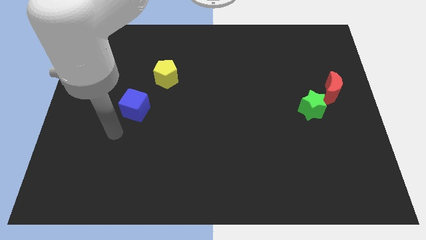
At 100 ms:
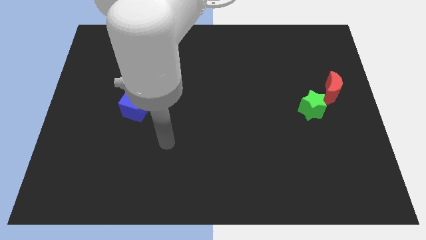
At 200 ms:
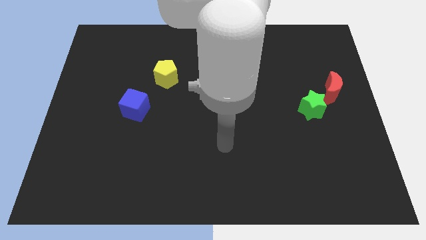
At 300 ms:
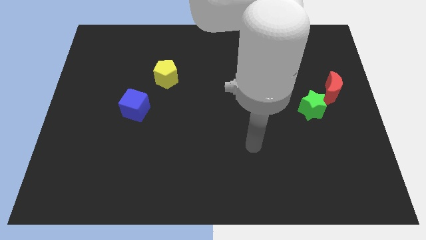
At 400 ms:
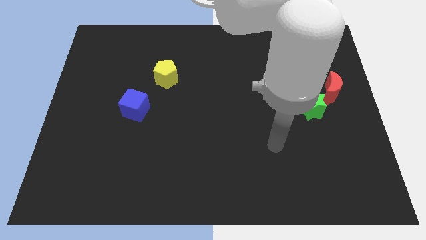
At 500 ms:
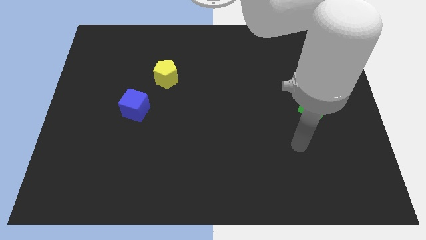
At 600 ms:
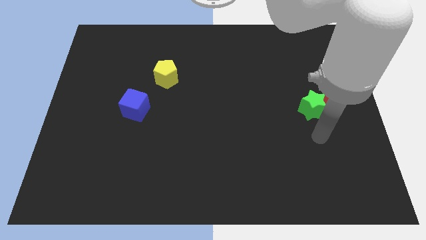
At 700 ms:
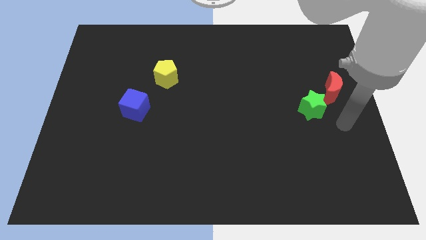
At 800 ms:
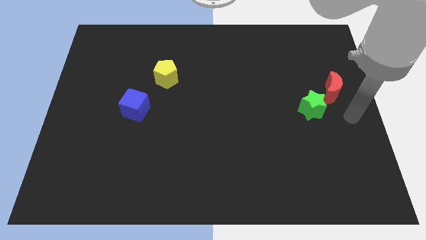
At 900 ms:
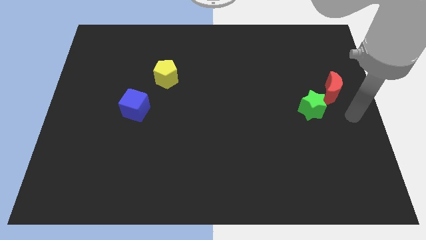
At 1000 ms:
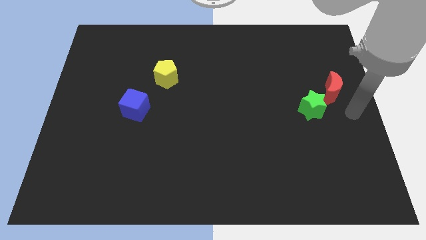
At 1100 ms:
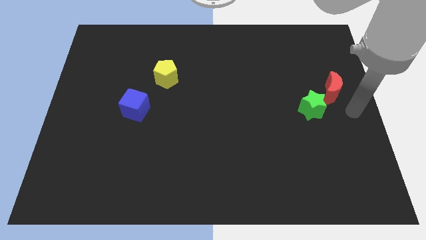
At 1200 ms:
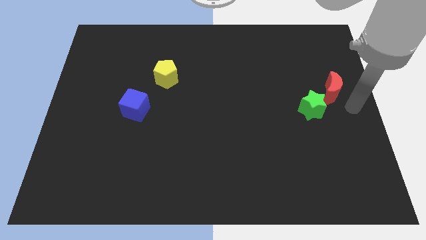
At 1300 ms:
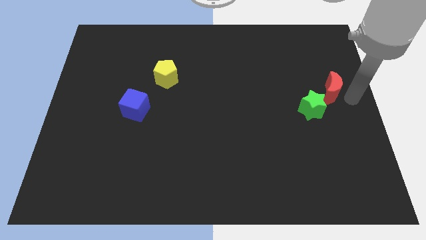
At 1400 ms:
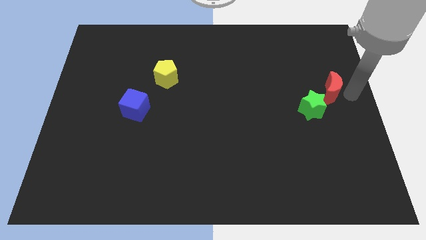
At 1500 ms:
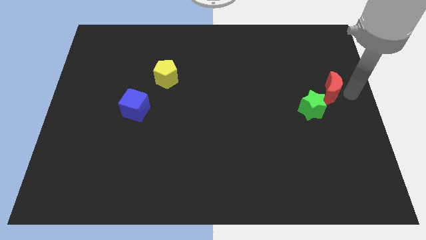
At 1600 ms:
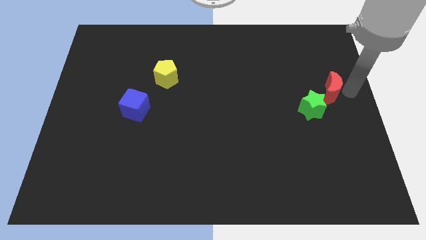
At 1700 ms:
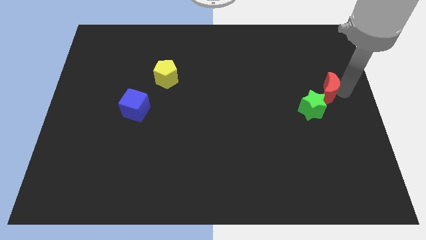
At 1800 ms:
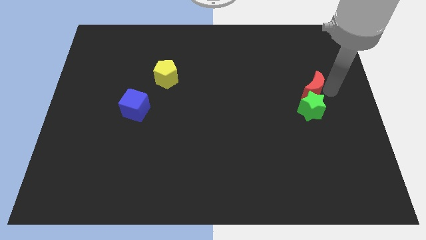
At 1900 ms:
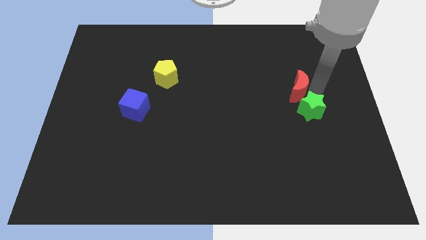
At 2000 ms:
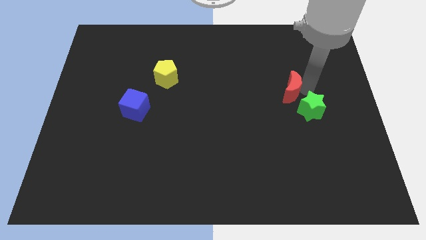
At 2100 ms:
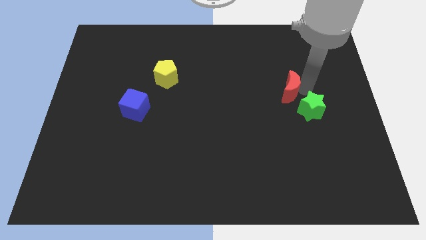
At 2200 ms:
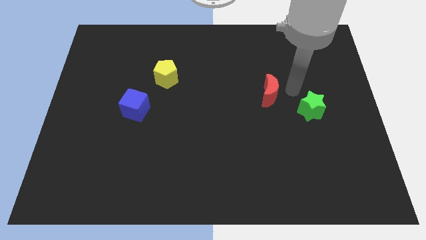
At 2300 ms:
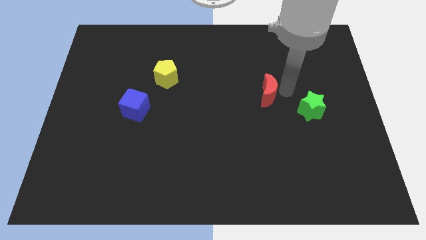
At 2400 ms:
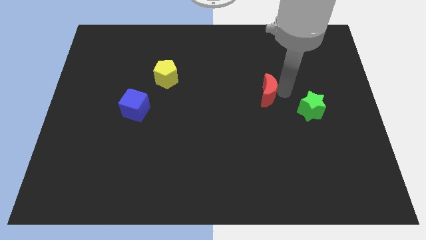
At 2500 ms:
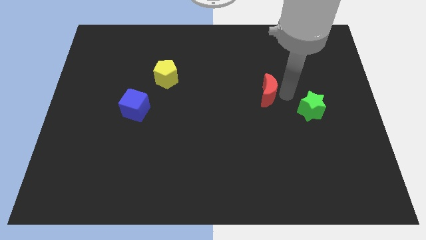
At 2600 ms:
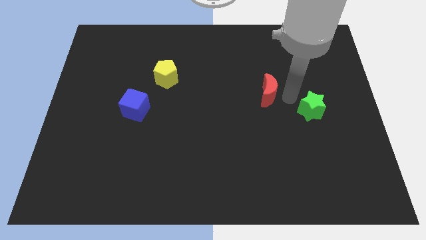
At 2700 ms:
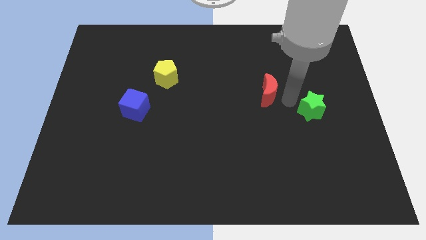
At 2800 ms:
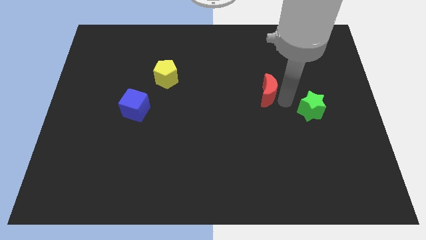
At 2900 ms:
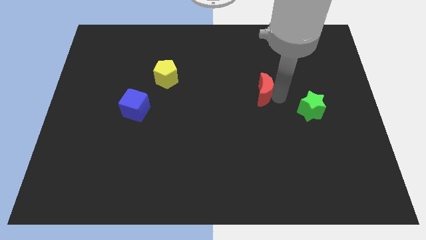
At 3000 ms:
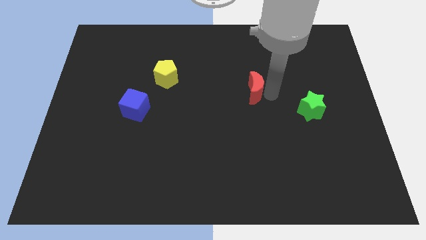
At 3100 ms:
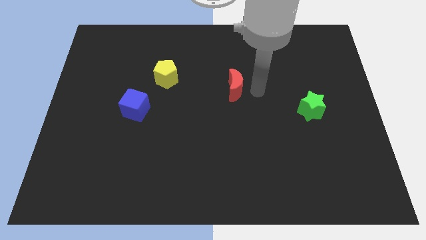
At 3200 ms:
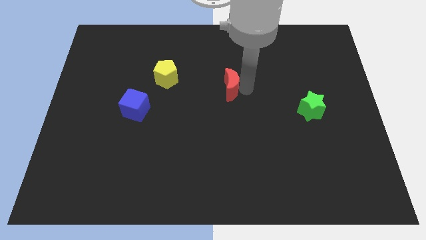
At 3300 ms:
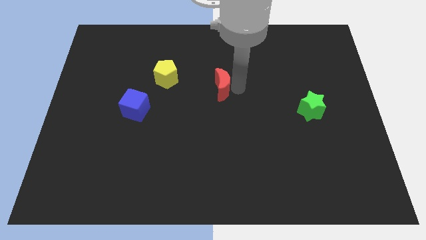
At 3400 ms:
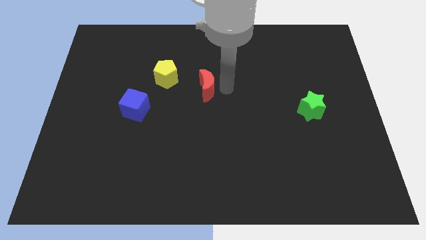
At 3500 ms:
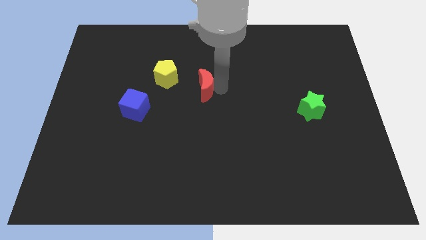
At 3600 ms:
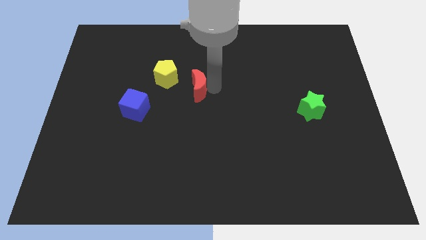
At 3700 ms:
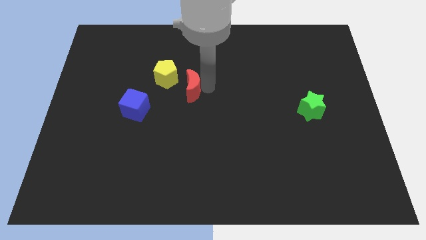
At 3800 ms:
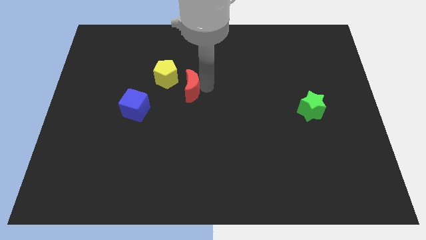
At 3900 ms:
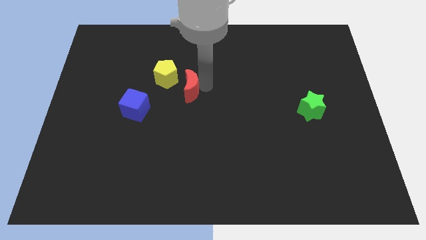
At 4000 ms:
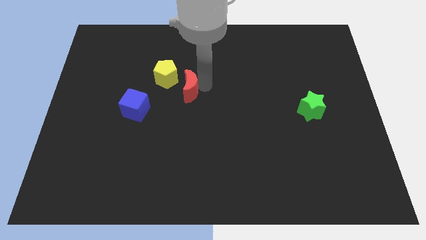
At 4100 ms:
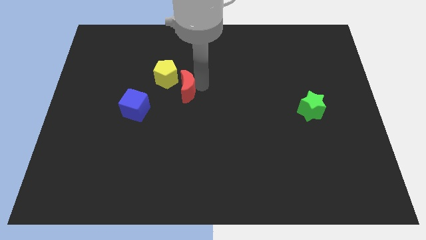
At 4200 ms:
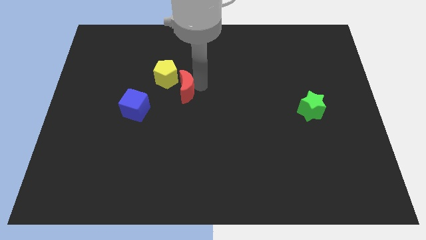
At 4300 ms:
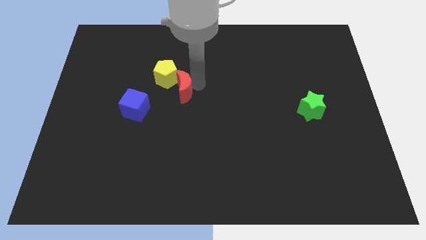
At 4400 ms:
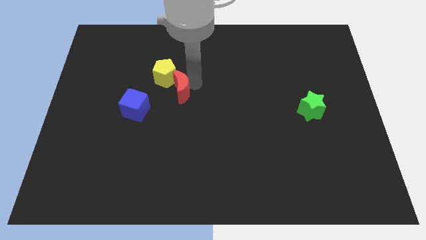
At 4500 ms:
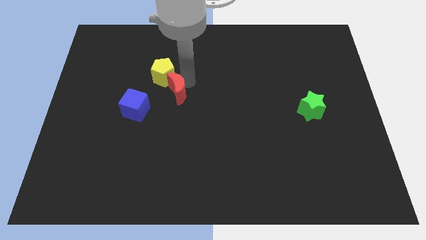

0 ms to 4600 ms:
put the red moon towards the yellow block

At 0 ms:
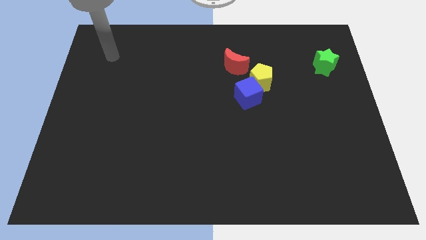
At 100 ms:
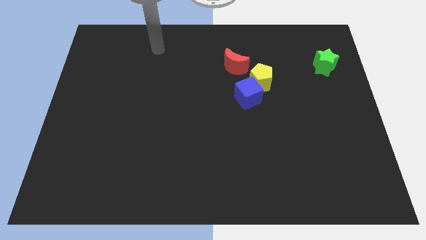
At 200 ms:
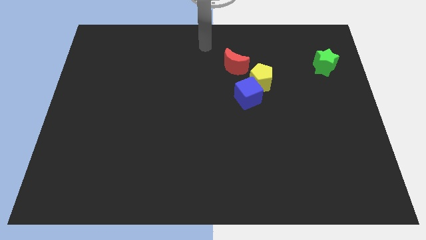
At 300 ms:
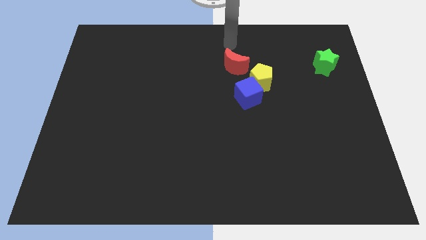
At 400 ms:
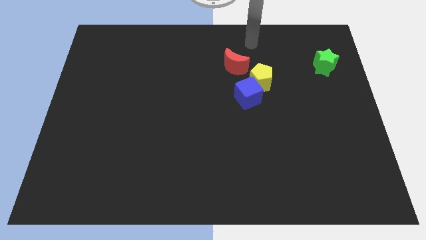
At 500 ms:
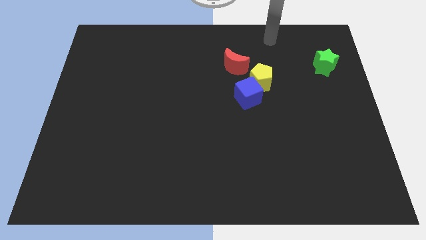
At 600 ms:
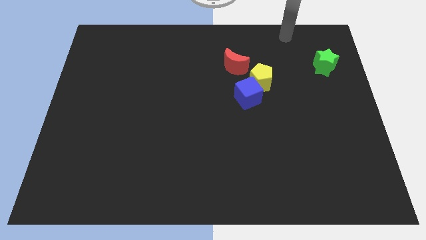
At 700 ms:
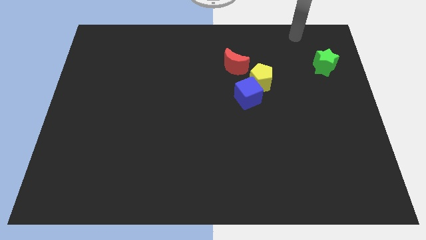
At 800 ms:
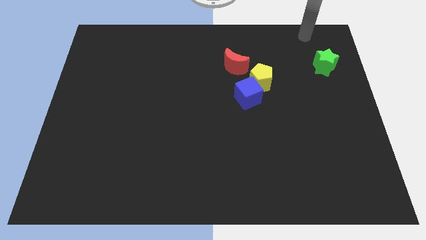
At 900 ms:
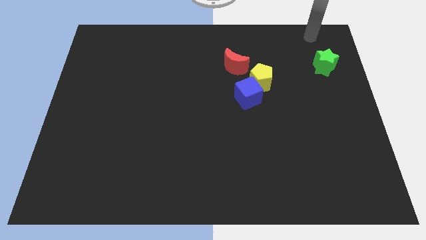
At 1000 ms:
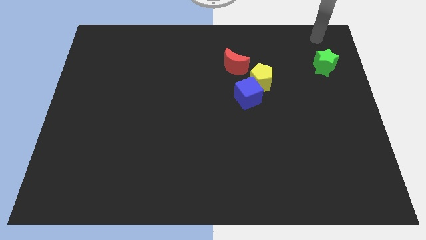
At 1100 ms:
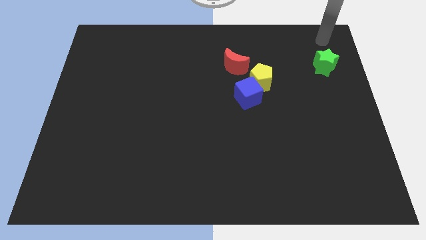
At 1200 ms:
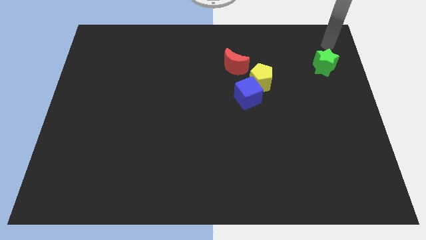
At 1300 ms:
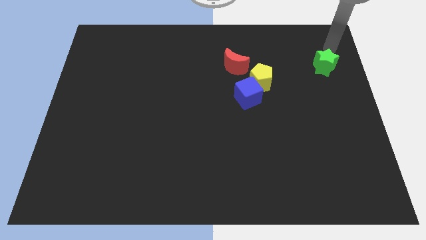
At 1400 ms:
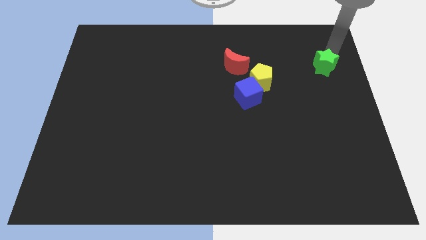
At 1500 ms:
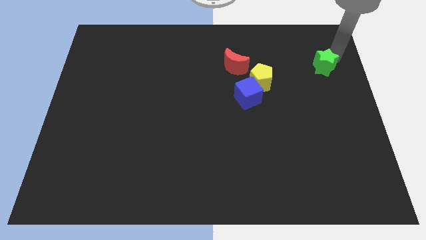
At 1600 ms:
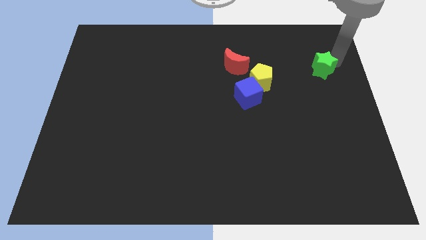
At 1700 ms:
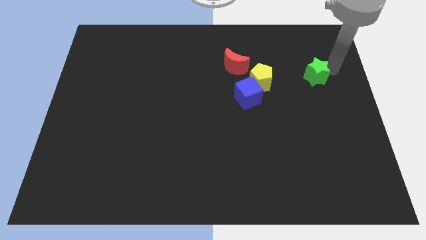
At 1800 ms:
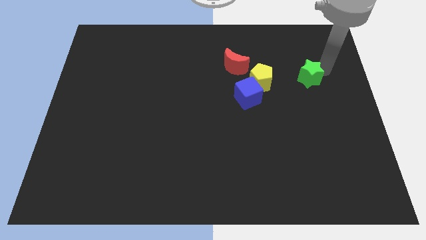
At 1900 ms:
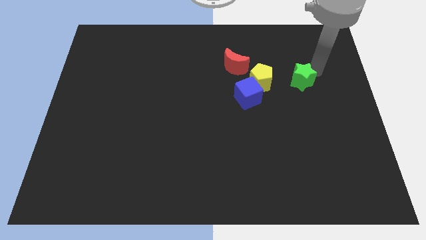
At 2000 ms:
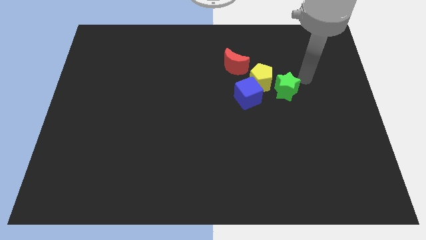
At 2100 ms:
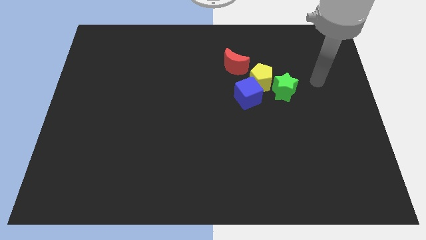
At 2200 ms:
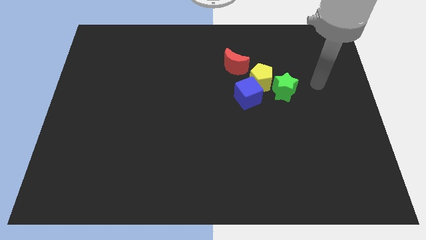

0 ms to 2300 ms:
put the green star to the yellow block

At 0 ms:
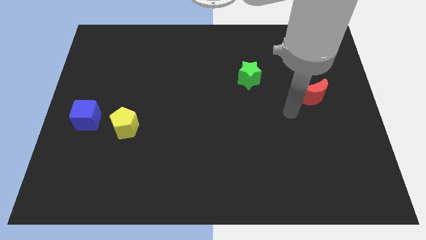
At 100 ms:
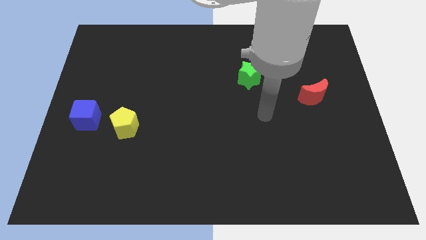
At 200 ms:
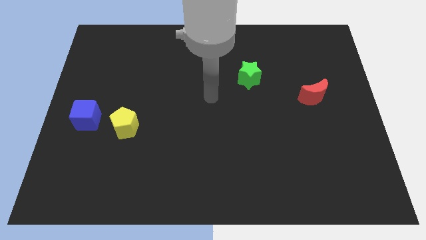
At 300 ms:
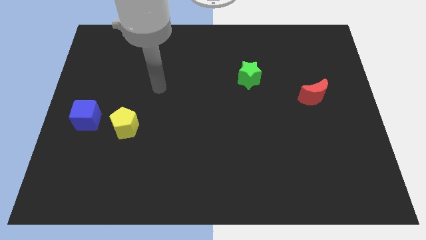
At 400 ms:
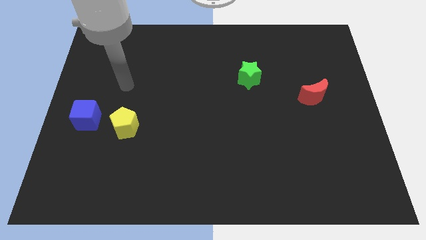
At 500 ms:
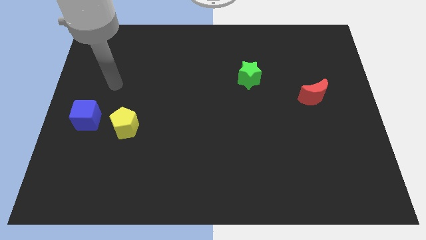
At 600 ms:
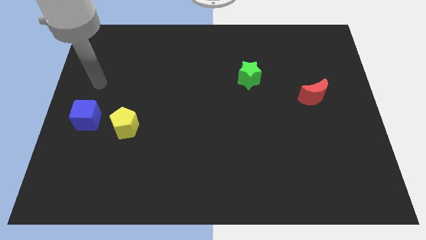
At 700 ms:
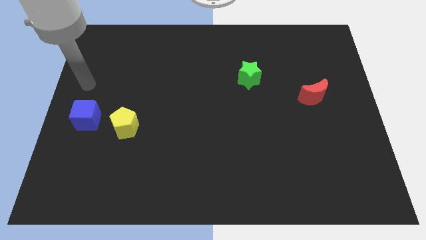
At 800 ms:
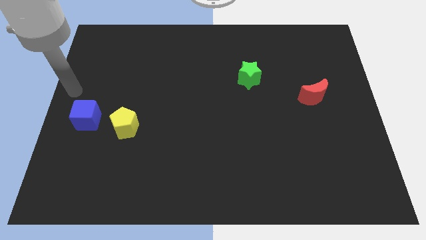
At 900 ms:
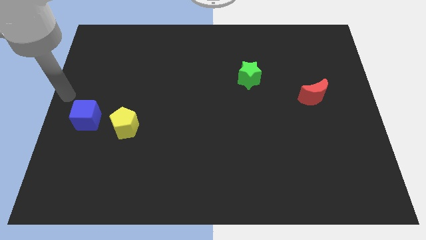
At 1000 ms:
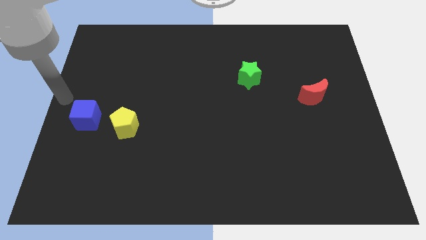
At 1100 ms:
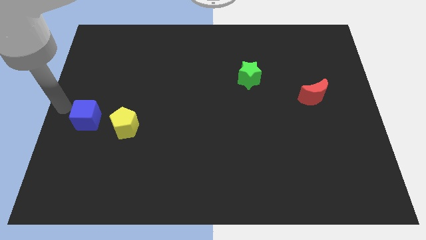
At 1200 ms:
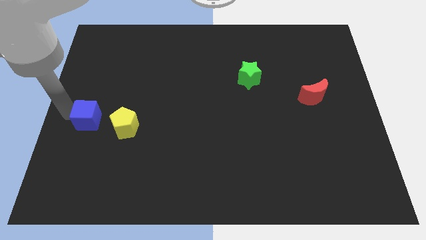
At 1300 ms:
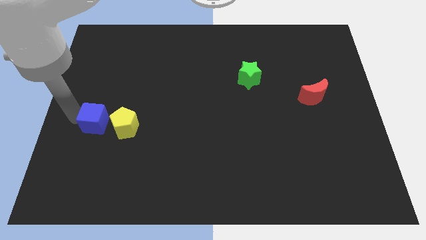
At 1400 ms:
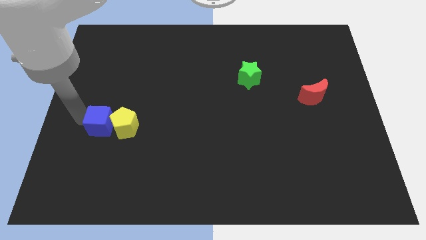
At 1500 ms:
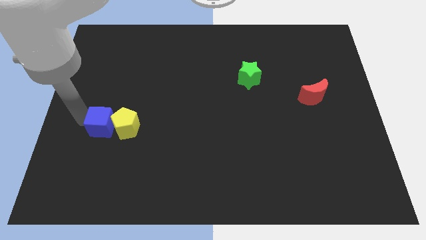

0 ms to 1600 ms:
push the blue cube towards the yellow pentagon

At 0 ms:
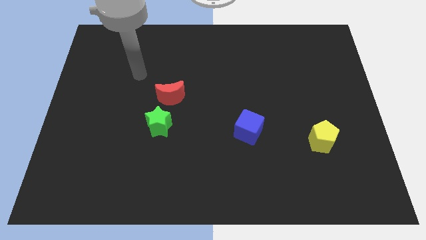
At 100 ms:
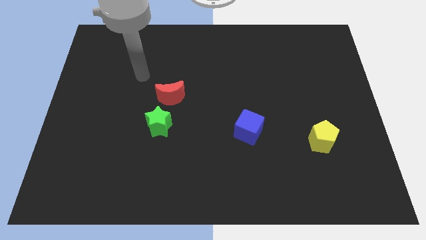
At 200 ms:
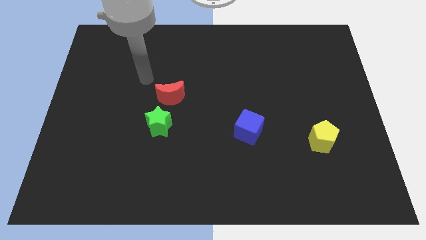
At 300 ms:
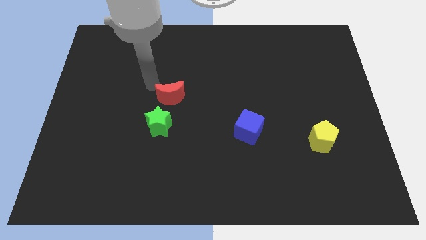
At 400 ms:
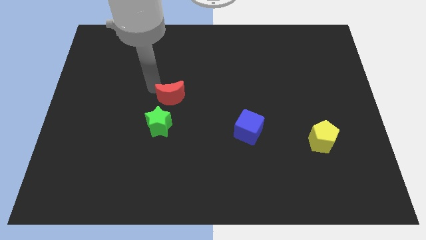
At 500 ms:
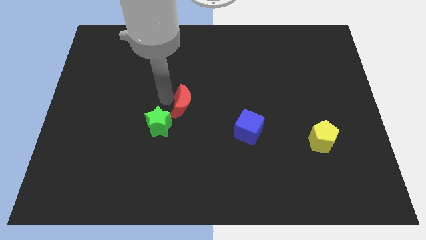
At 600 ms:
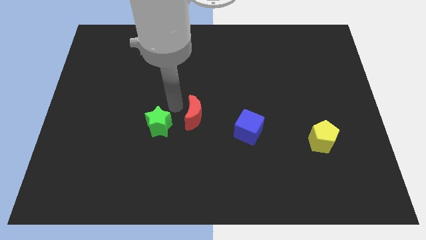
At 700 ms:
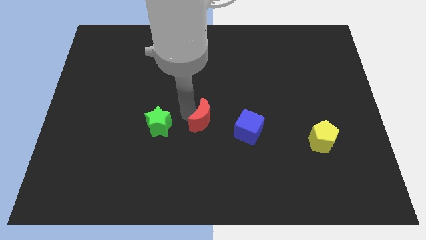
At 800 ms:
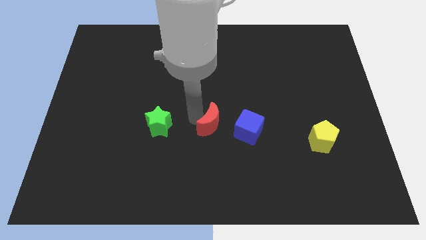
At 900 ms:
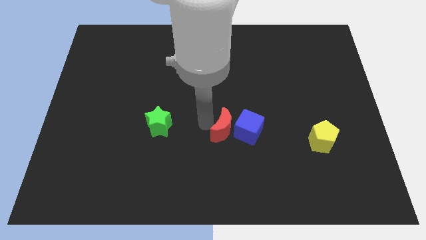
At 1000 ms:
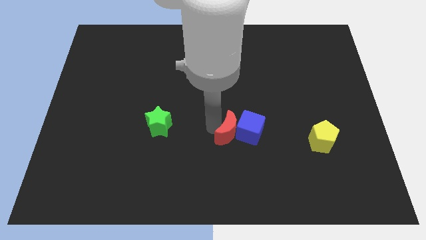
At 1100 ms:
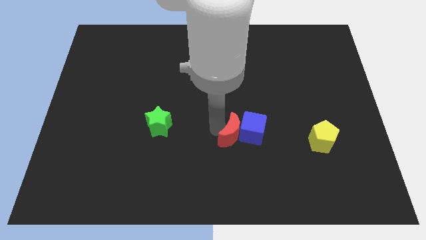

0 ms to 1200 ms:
put the moon next to the blue cube
